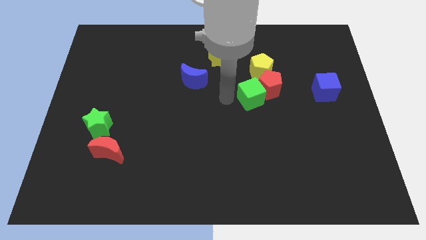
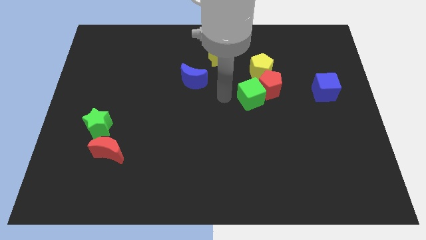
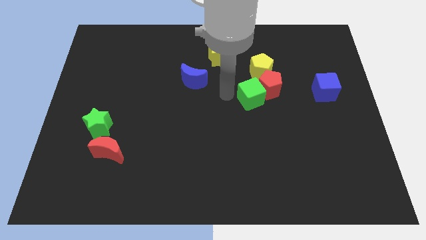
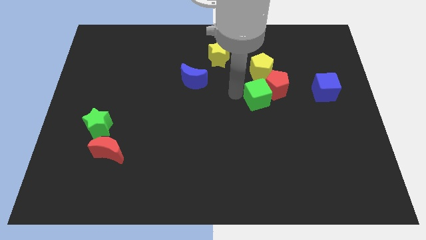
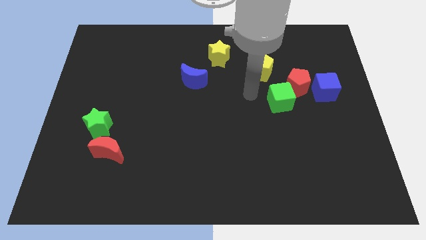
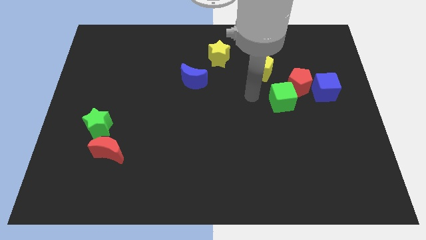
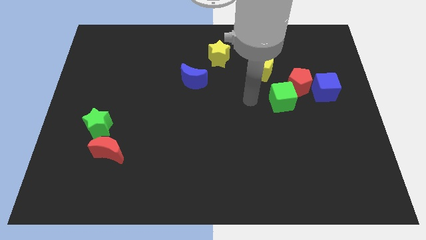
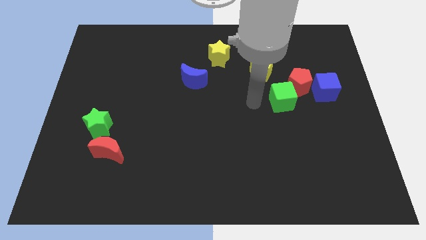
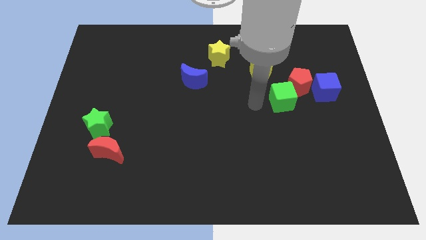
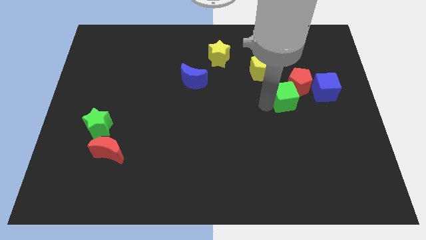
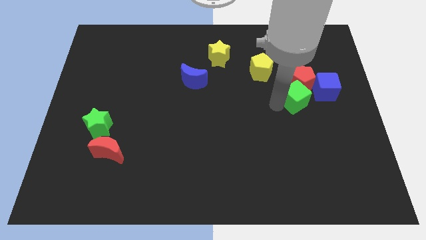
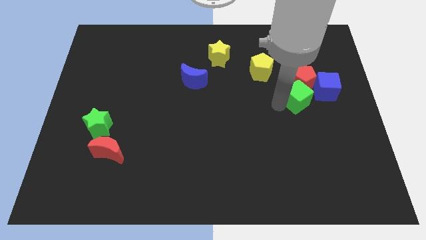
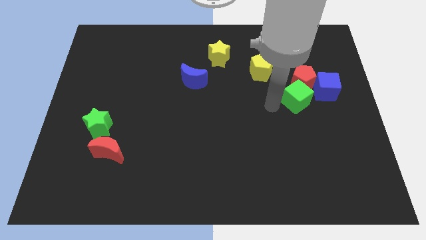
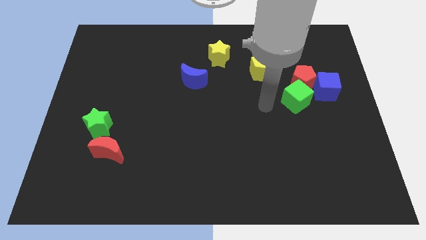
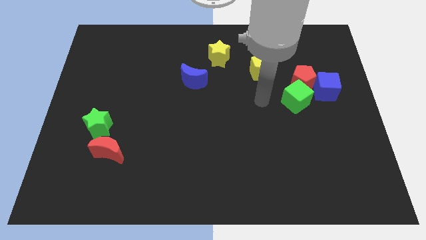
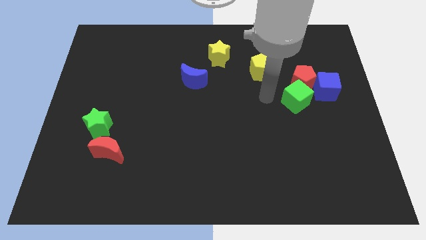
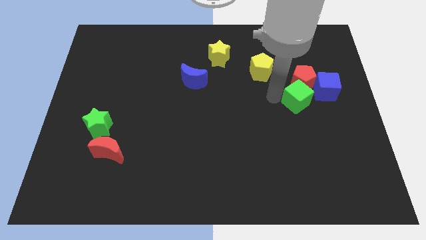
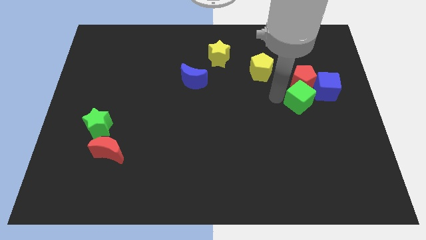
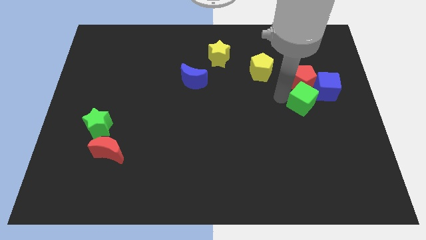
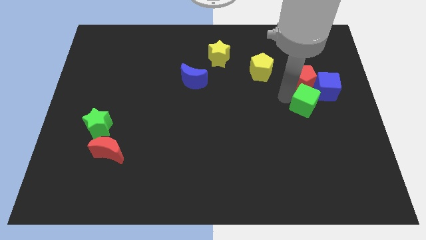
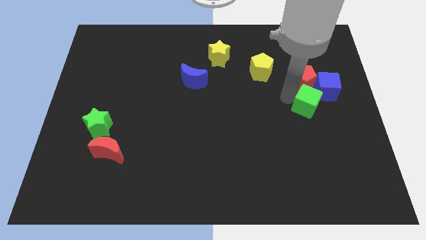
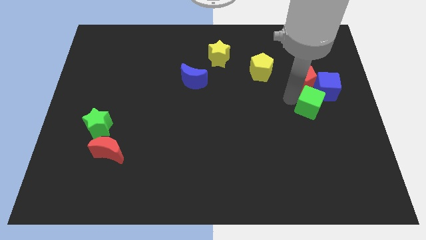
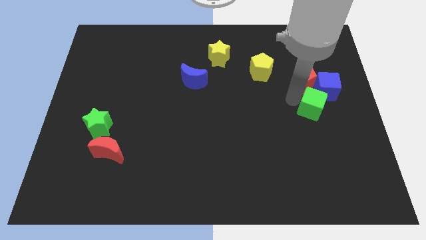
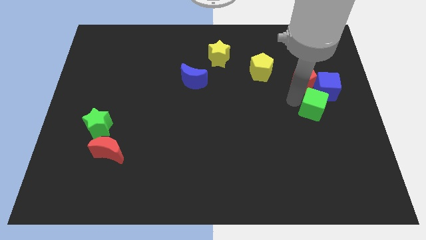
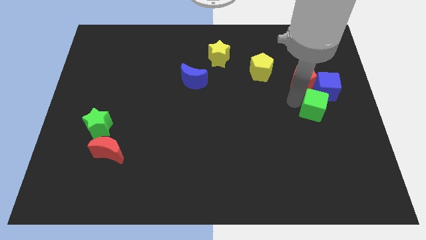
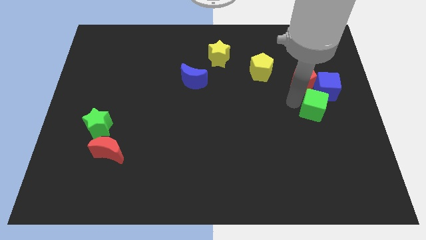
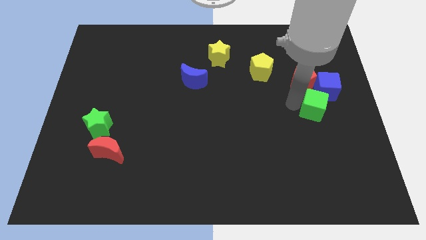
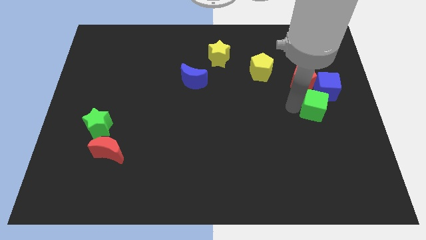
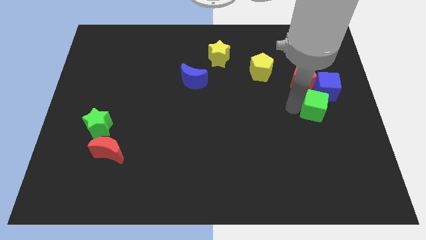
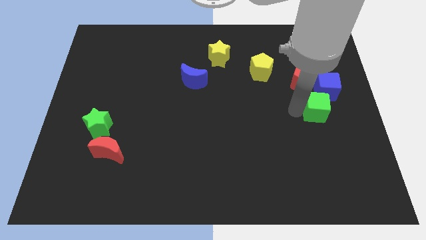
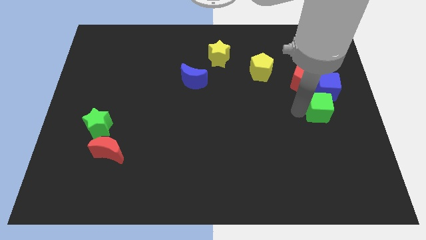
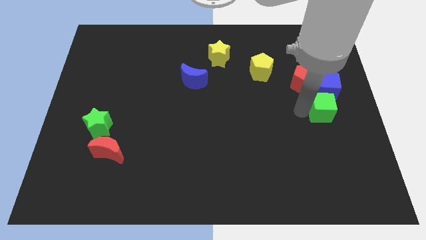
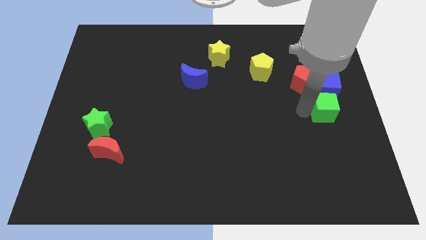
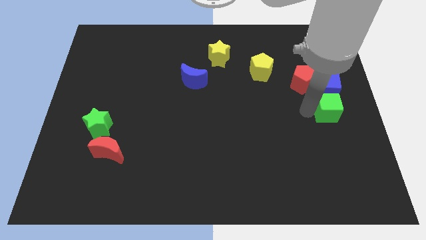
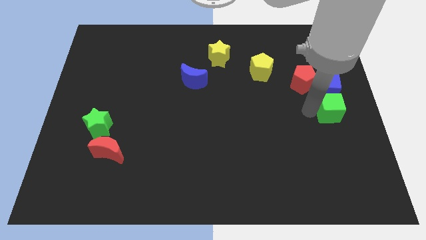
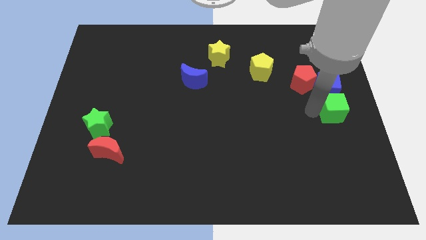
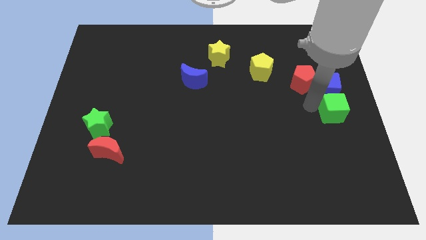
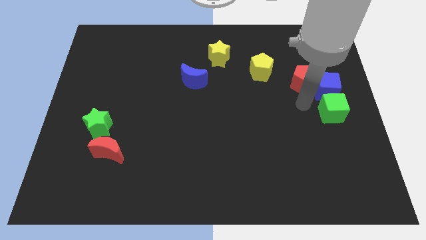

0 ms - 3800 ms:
place the green cube below the blue cube

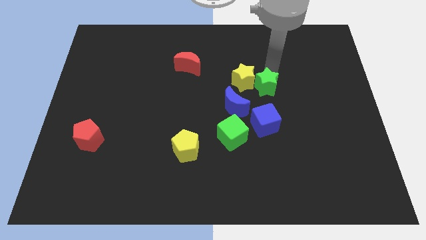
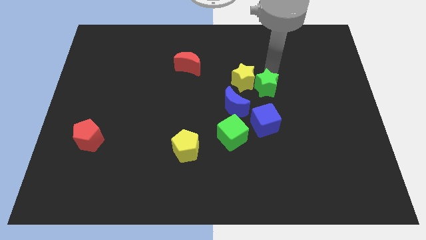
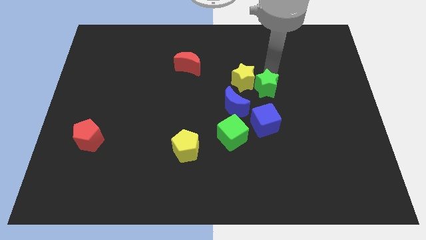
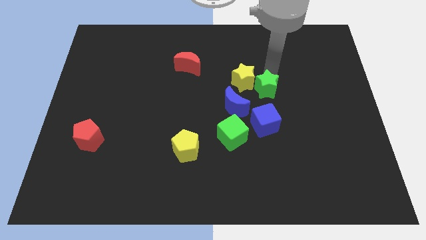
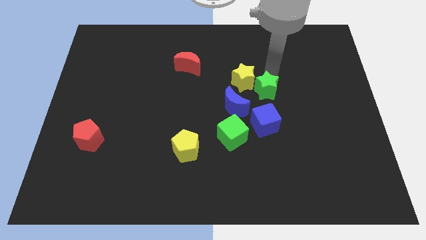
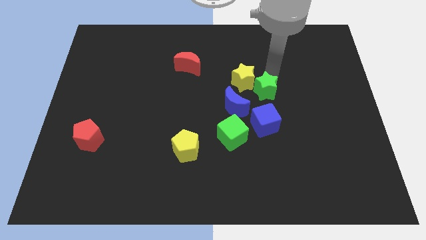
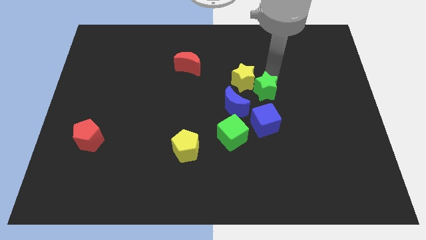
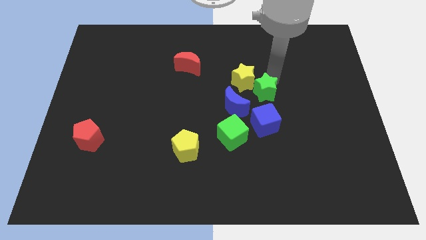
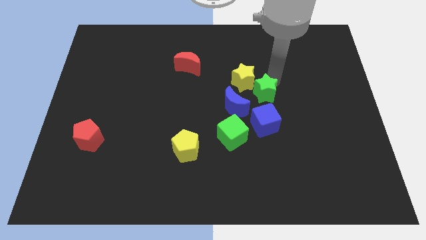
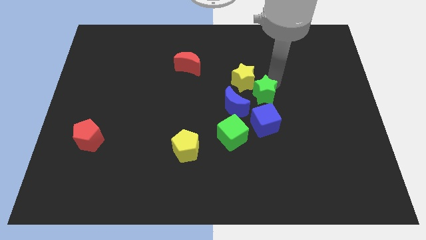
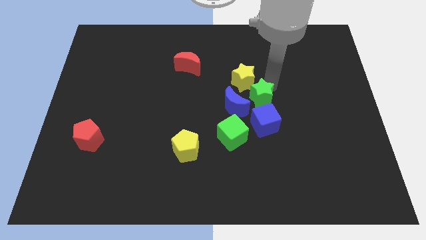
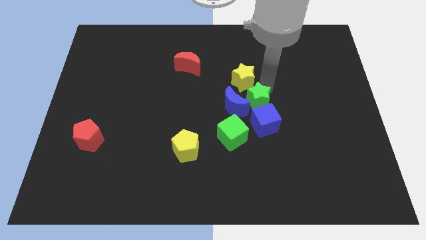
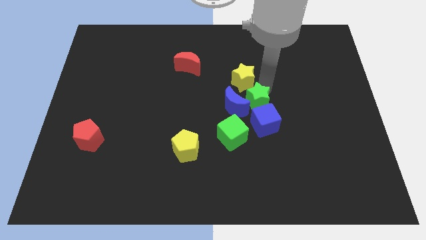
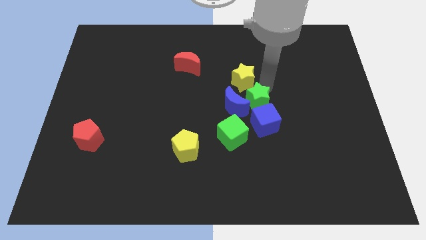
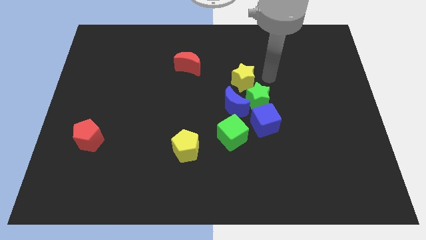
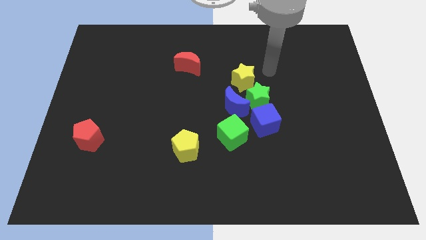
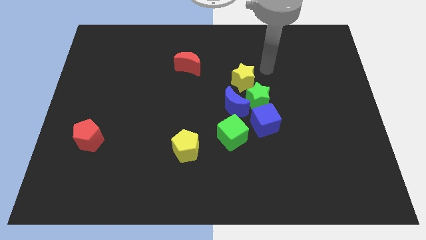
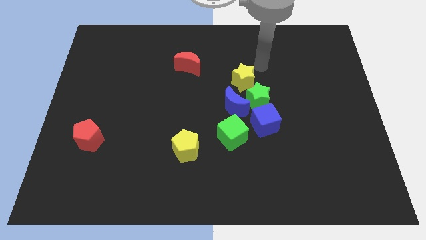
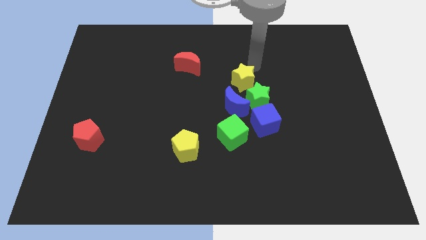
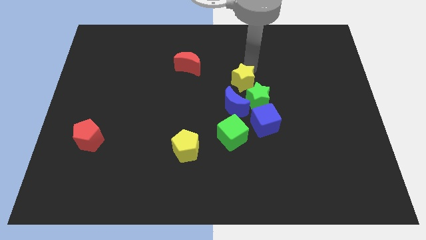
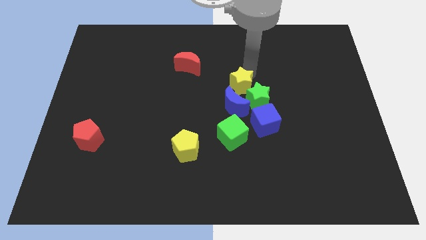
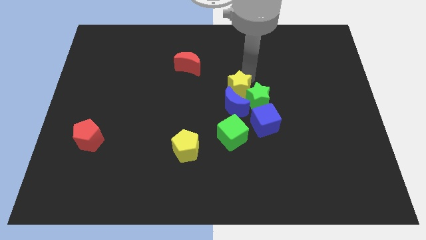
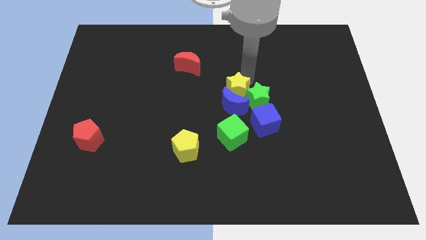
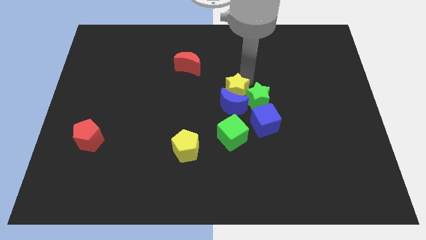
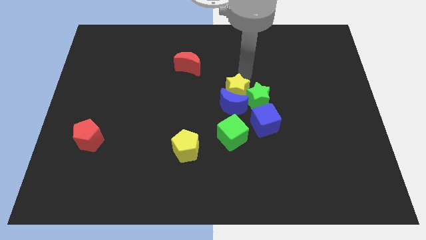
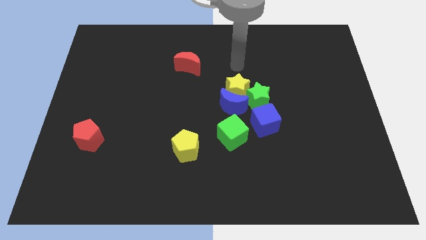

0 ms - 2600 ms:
move yellow star towards blue crescent

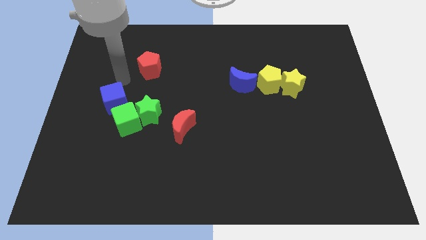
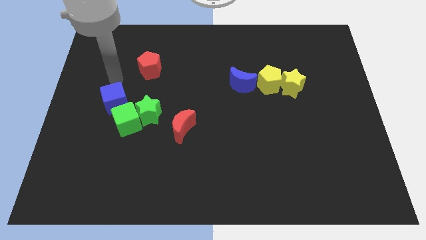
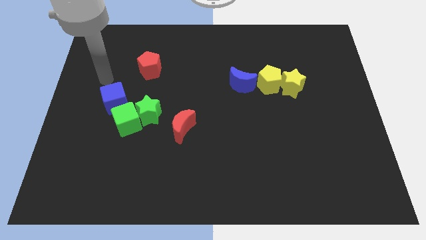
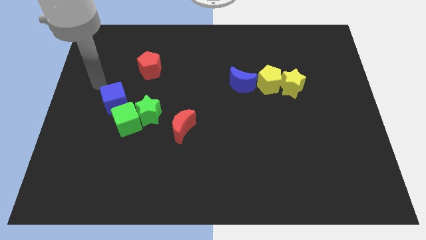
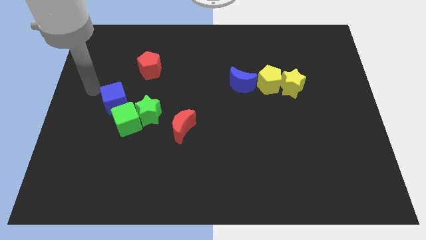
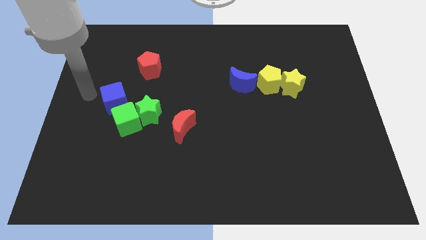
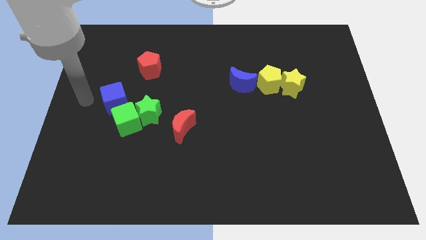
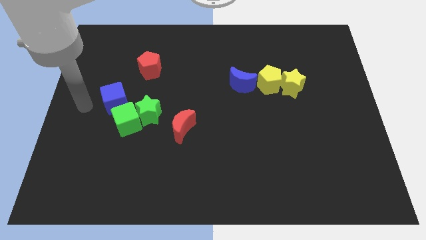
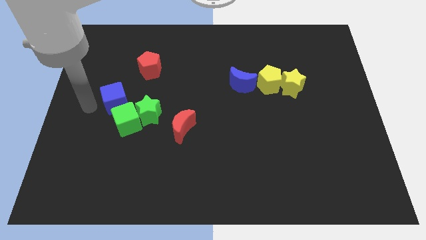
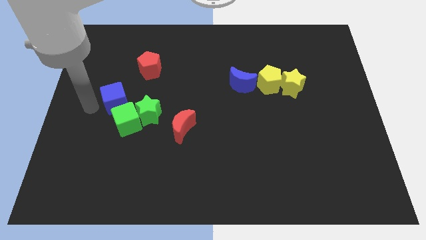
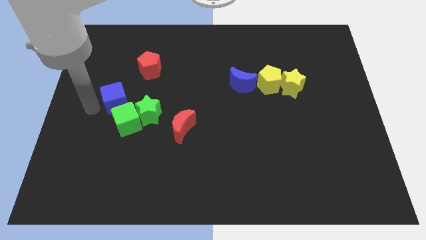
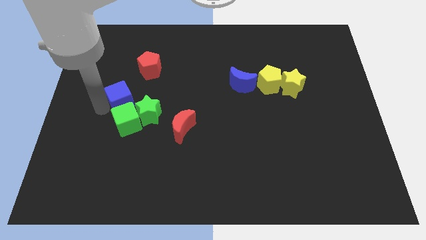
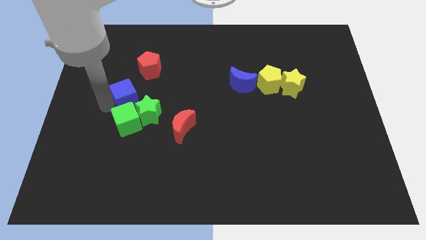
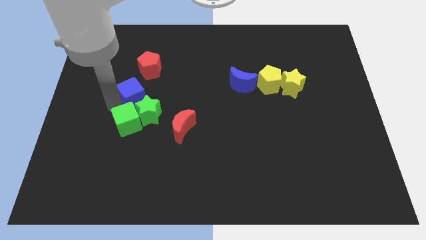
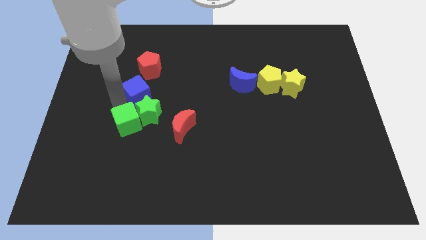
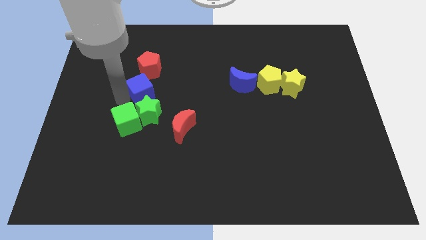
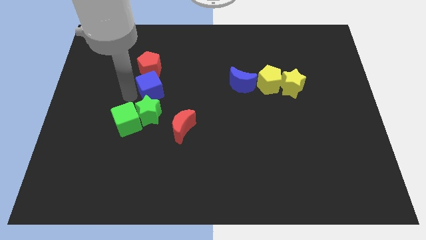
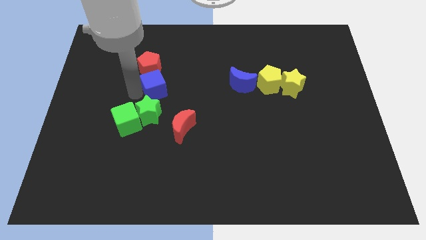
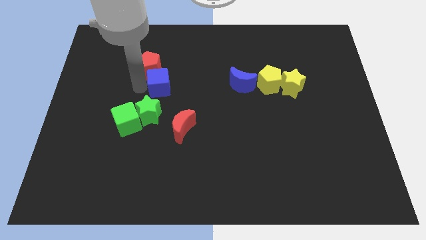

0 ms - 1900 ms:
place blue moon below the red pentagon

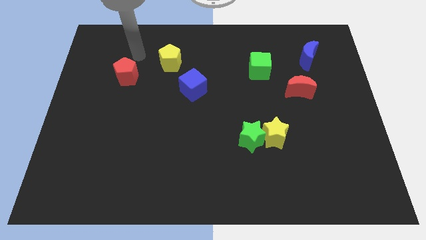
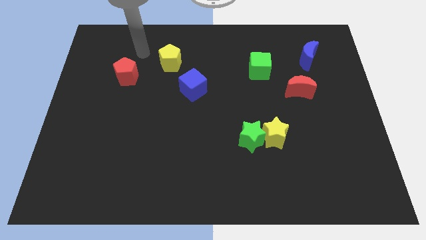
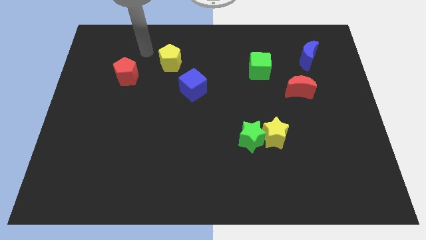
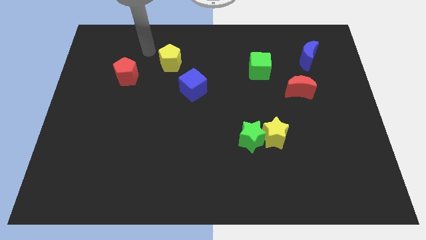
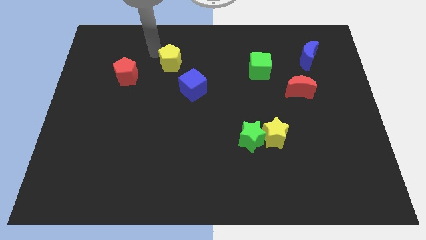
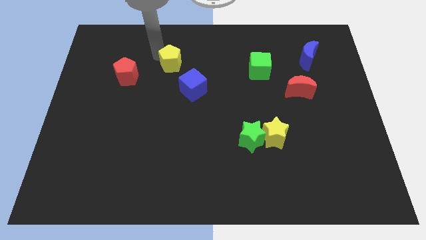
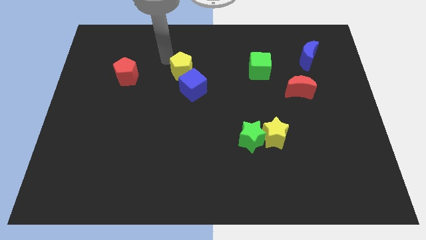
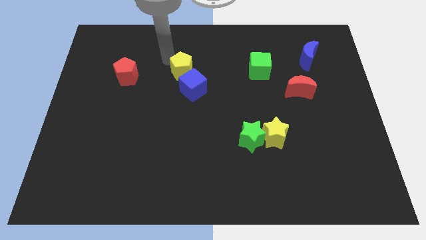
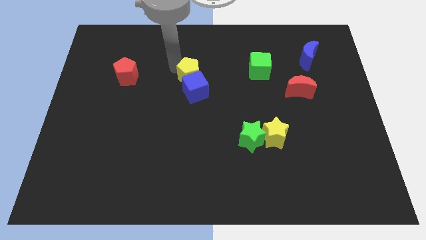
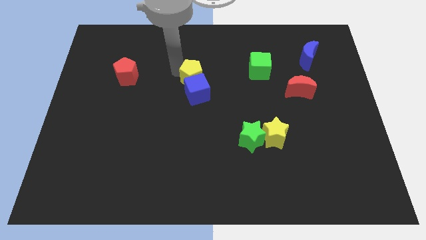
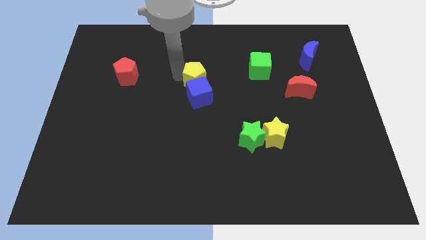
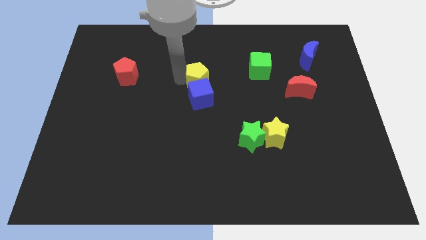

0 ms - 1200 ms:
push the yellow pentagon into the blue cube
